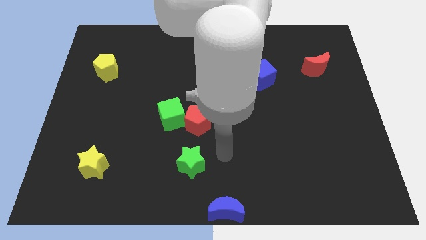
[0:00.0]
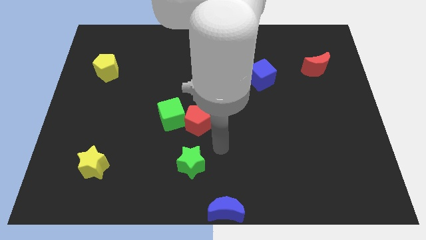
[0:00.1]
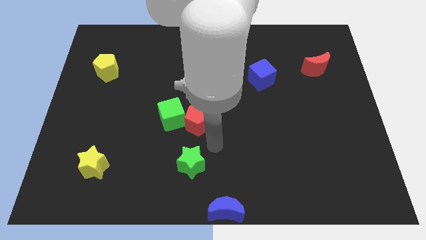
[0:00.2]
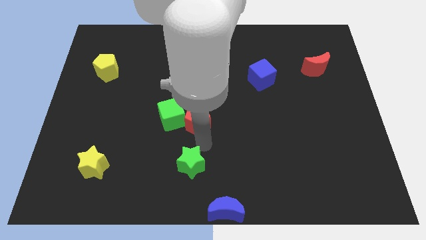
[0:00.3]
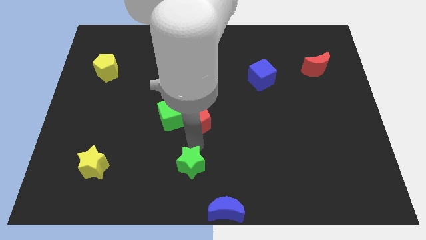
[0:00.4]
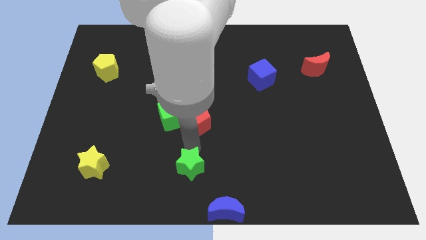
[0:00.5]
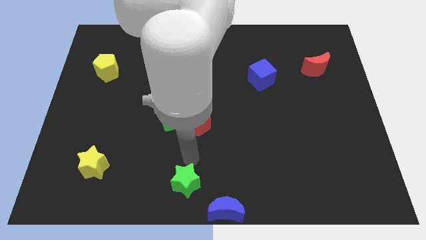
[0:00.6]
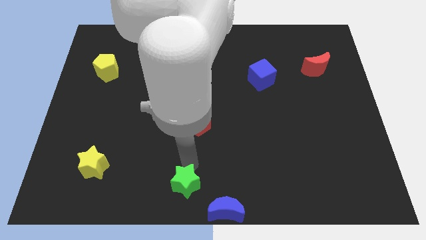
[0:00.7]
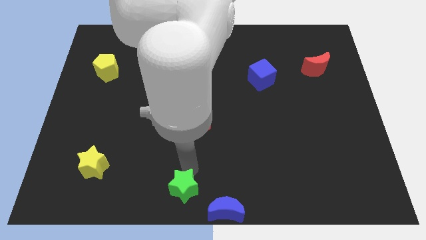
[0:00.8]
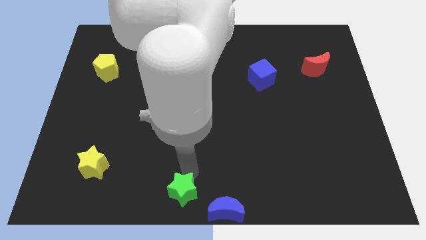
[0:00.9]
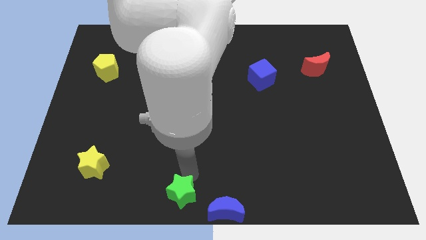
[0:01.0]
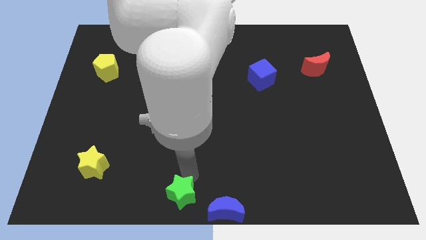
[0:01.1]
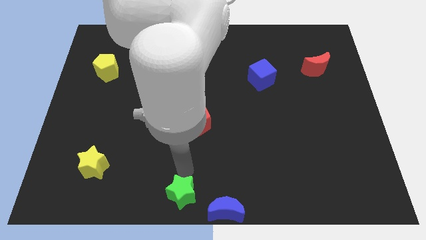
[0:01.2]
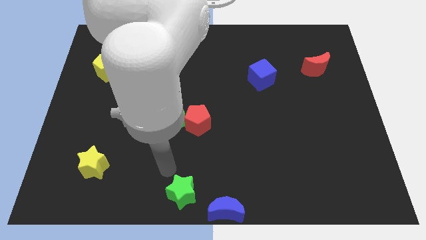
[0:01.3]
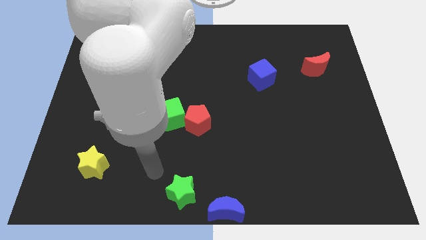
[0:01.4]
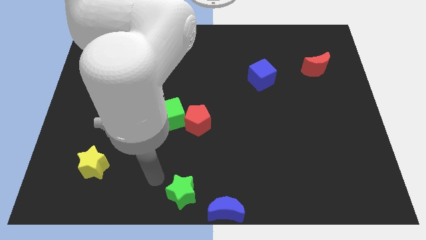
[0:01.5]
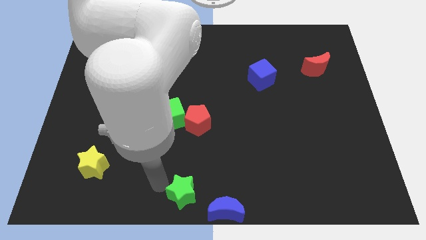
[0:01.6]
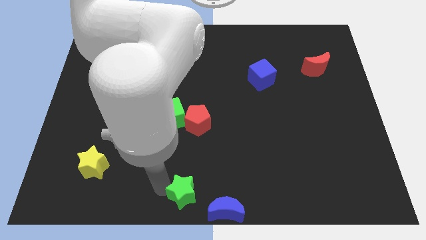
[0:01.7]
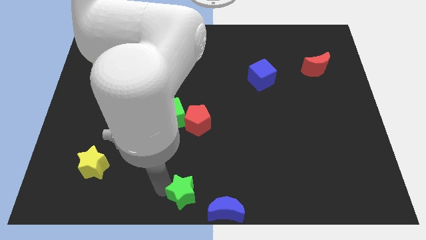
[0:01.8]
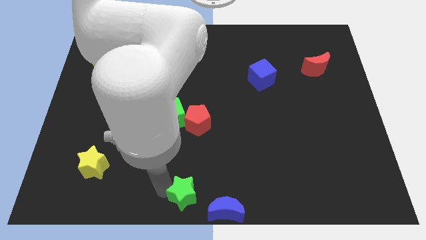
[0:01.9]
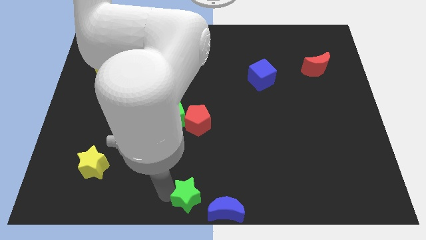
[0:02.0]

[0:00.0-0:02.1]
push the green star to the left of blue moon

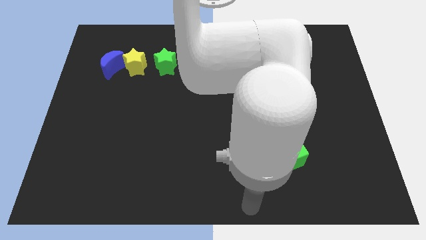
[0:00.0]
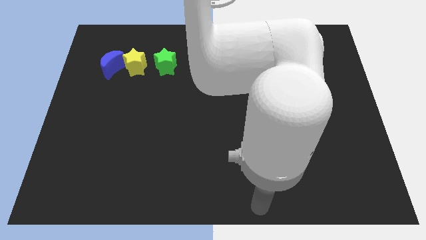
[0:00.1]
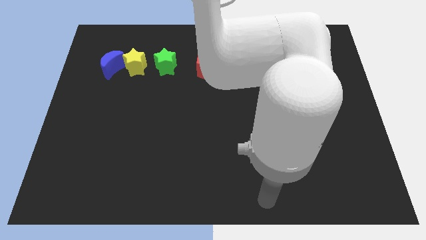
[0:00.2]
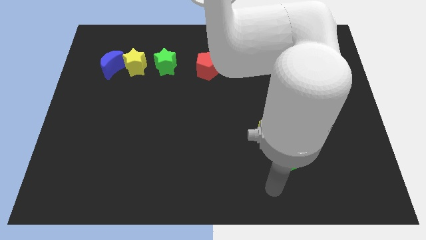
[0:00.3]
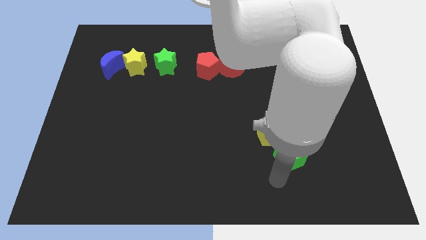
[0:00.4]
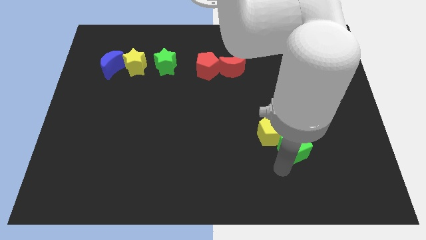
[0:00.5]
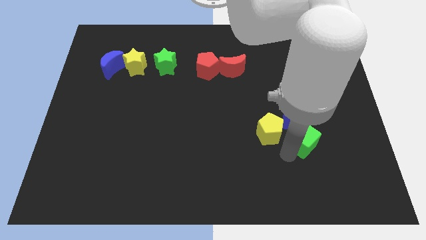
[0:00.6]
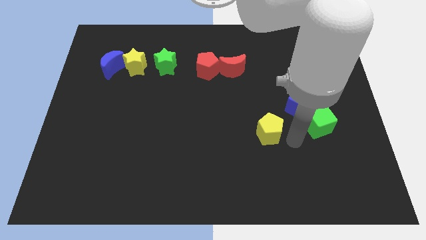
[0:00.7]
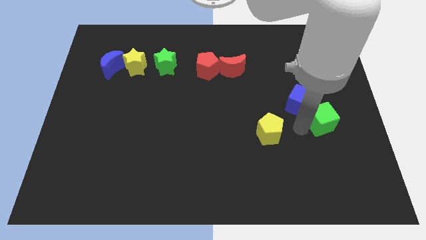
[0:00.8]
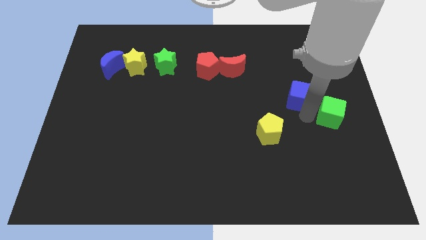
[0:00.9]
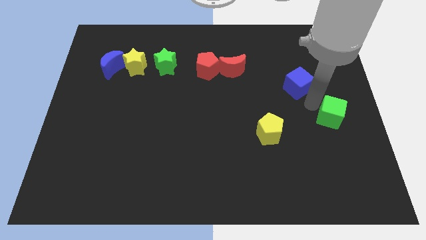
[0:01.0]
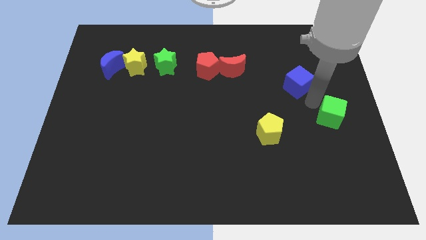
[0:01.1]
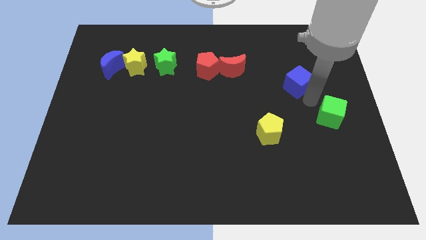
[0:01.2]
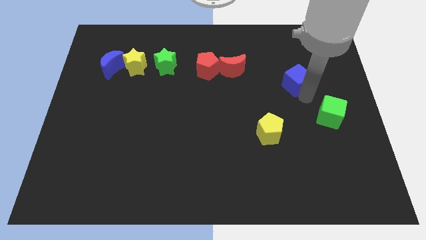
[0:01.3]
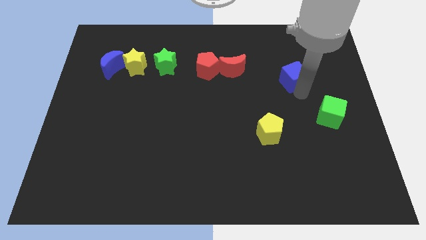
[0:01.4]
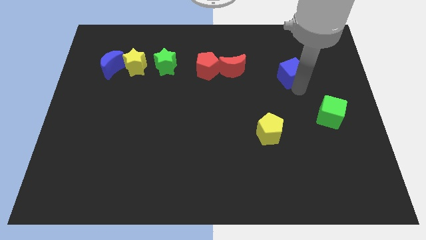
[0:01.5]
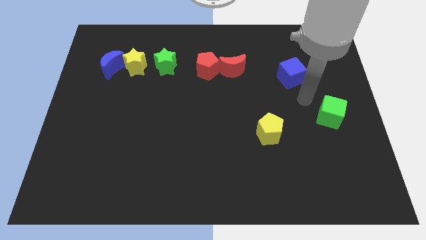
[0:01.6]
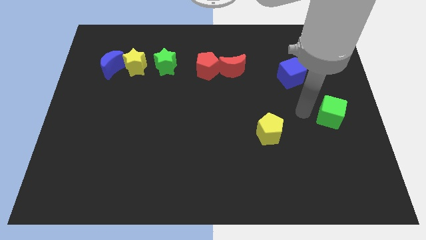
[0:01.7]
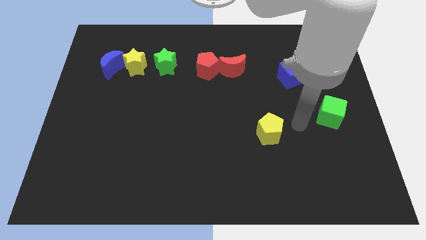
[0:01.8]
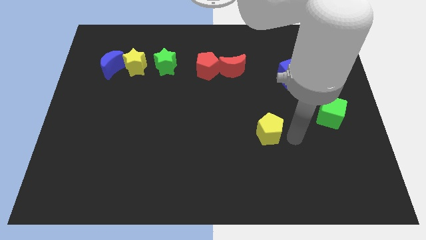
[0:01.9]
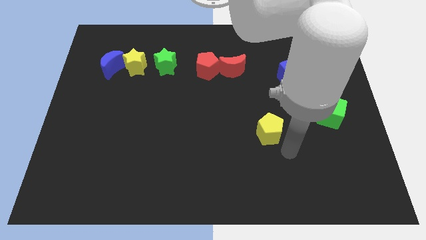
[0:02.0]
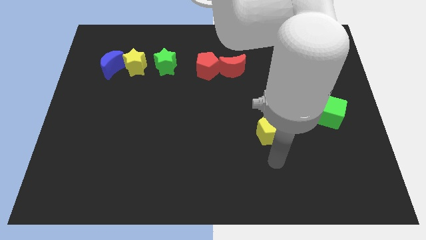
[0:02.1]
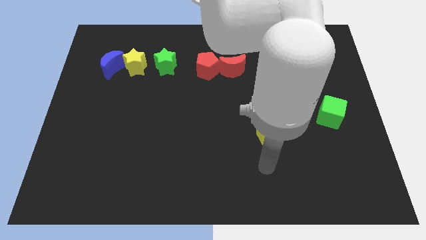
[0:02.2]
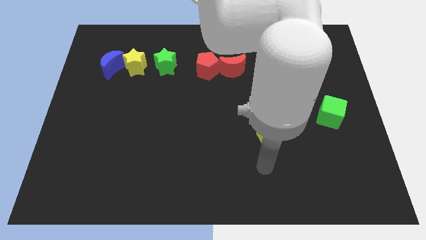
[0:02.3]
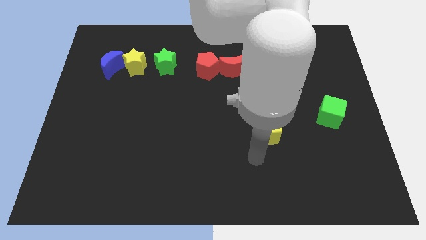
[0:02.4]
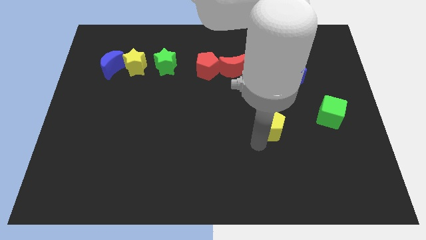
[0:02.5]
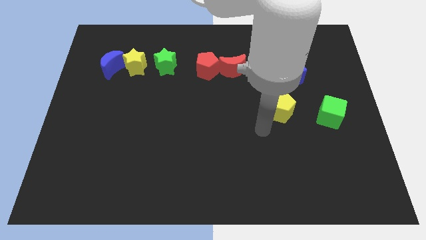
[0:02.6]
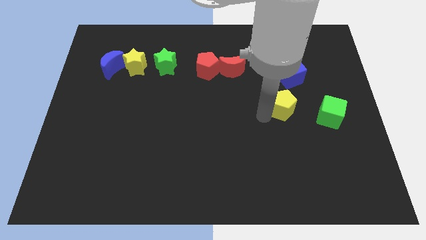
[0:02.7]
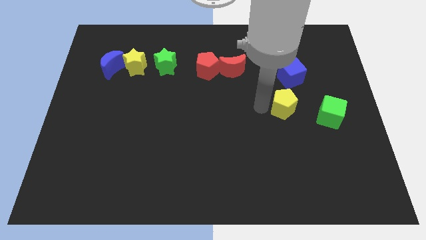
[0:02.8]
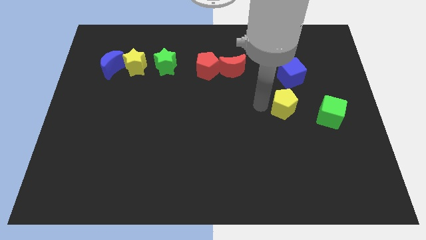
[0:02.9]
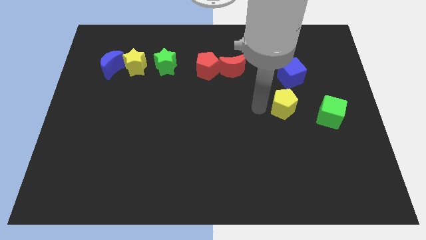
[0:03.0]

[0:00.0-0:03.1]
separate the blocks from the traingle

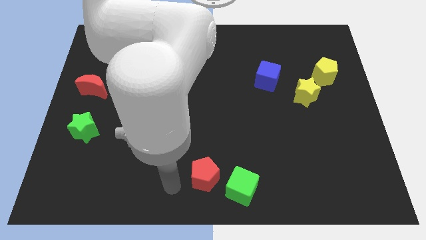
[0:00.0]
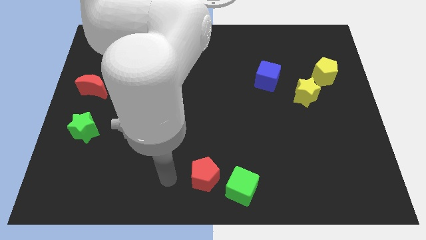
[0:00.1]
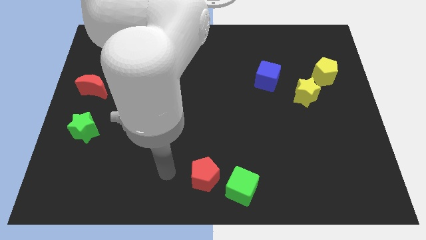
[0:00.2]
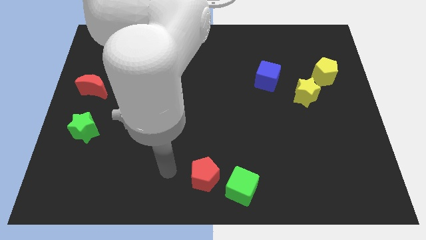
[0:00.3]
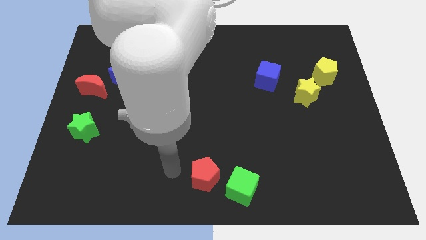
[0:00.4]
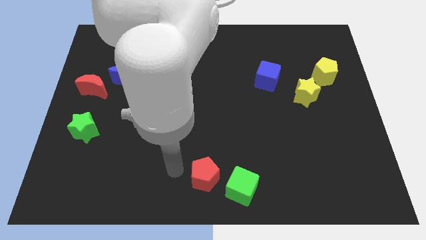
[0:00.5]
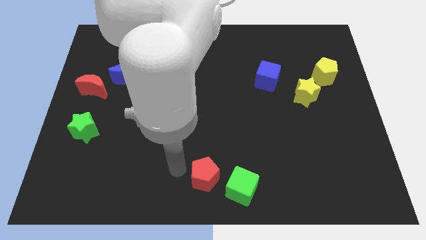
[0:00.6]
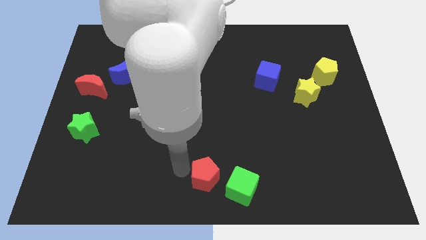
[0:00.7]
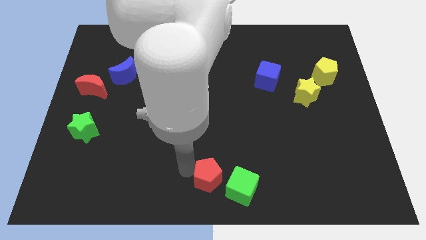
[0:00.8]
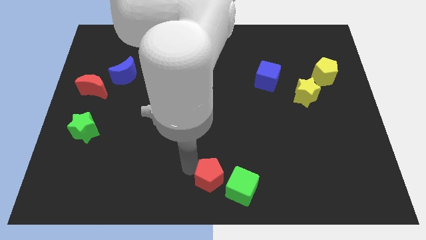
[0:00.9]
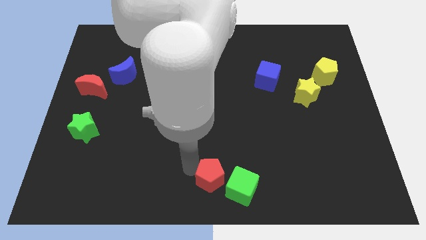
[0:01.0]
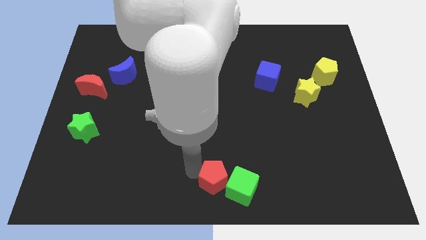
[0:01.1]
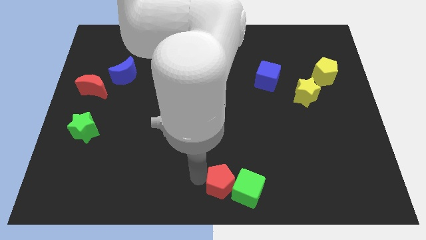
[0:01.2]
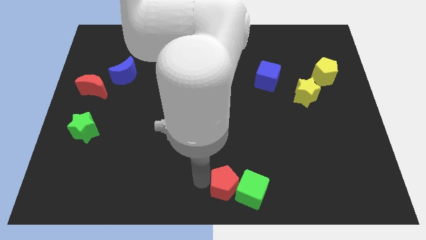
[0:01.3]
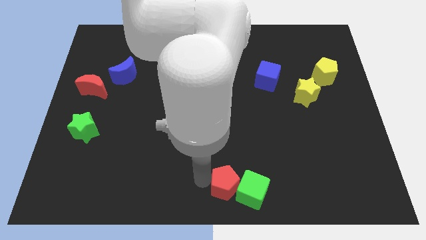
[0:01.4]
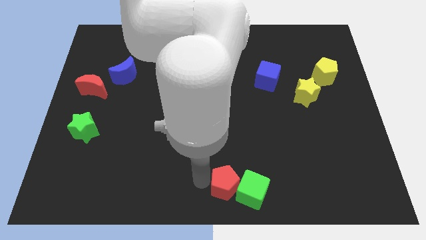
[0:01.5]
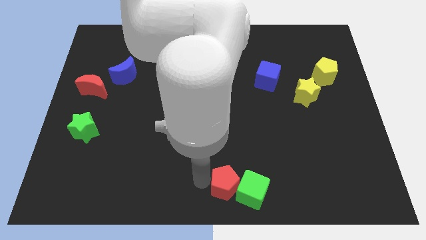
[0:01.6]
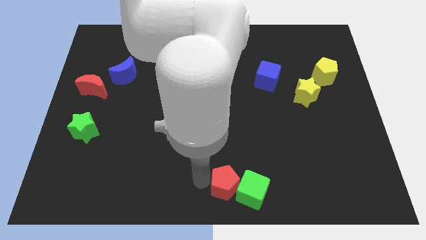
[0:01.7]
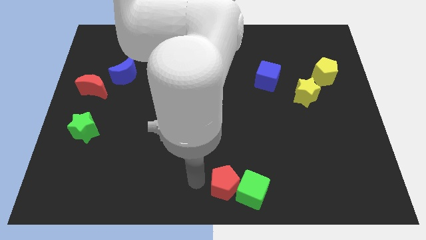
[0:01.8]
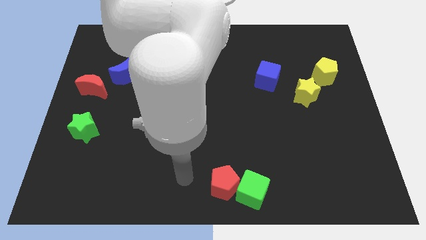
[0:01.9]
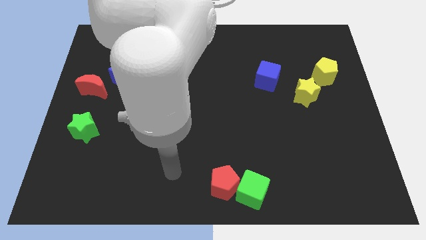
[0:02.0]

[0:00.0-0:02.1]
move the red pentagon to the bottom left side of the green cube

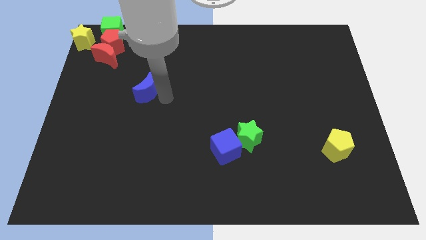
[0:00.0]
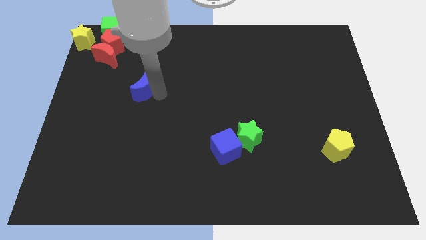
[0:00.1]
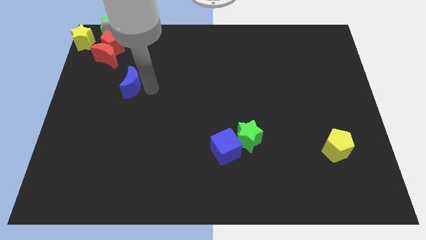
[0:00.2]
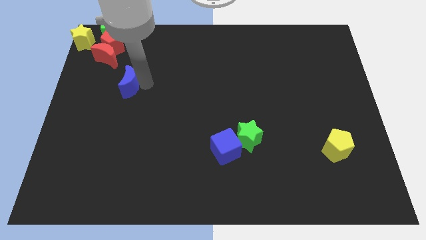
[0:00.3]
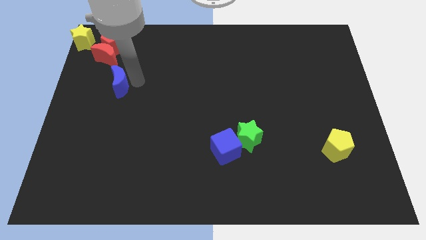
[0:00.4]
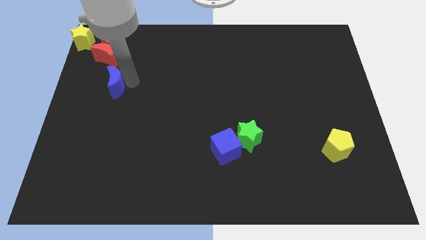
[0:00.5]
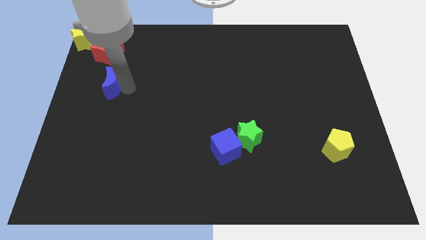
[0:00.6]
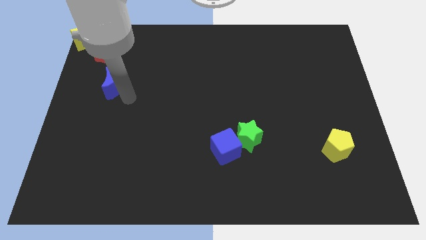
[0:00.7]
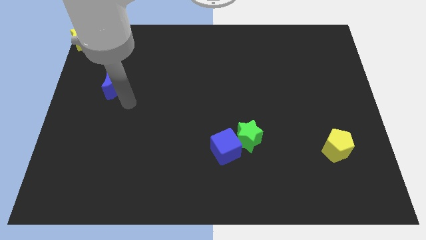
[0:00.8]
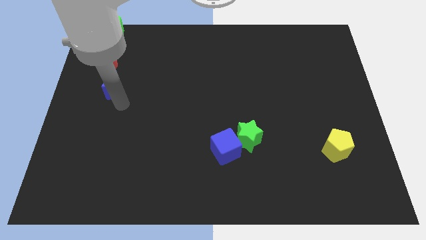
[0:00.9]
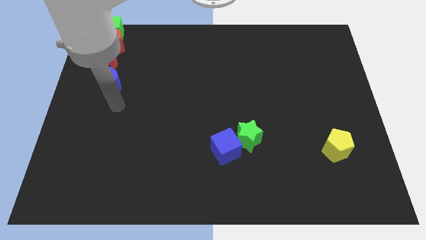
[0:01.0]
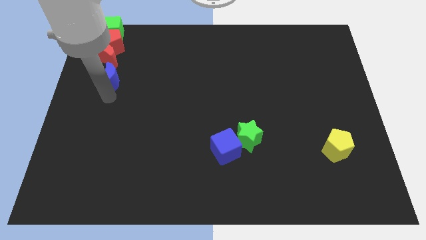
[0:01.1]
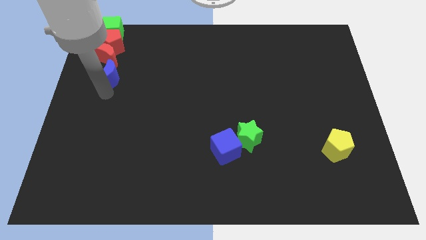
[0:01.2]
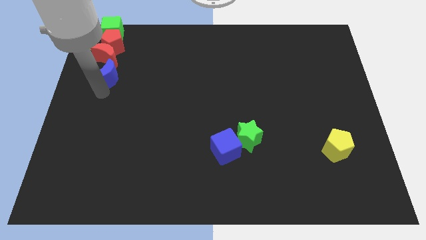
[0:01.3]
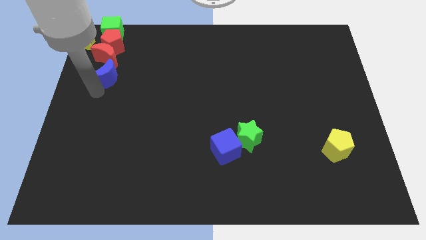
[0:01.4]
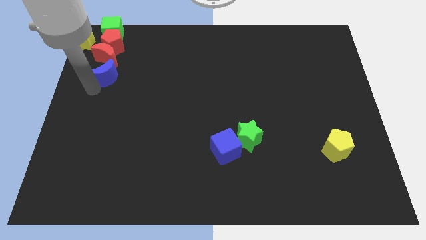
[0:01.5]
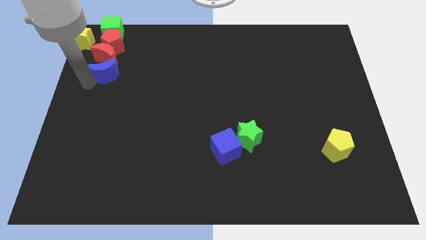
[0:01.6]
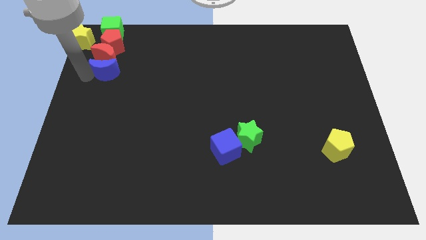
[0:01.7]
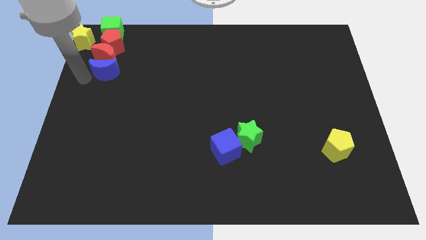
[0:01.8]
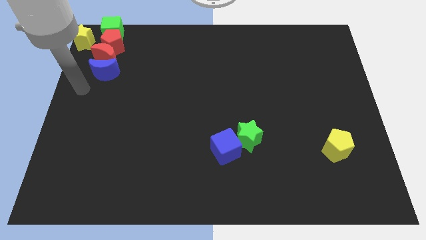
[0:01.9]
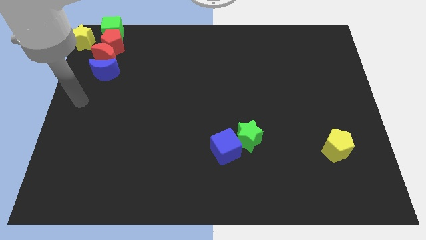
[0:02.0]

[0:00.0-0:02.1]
place the blue crescent bottom to the red crescent
